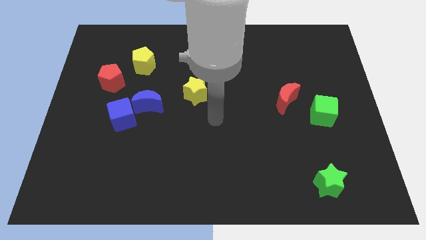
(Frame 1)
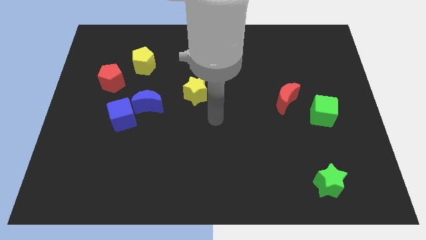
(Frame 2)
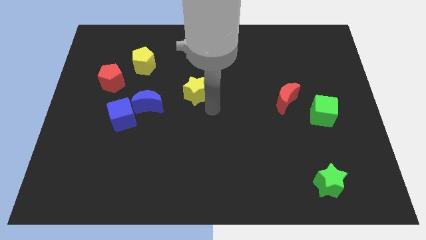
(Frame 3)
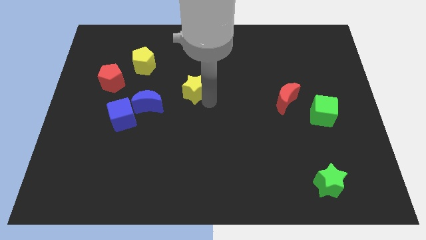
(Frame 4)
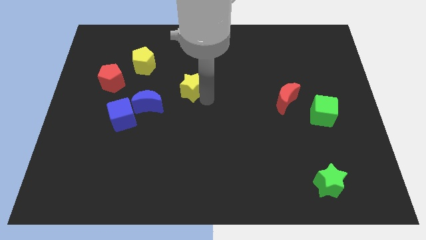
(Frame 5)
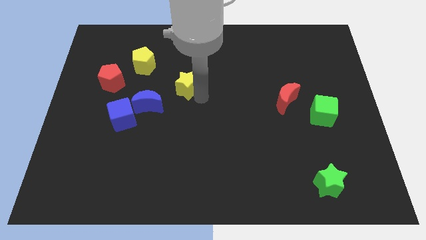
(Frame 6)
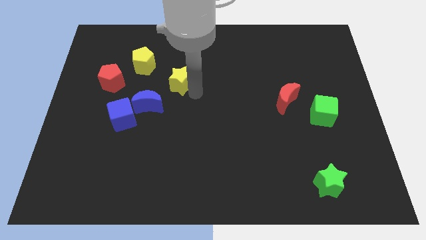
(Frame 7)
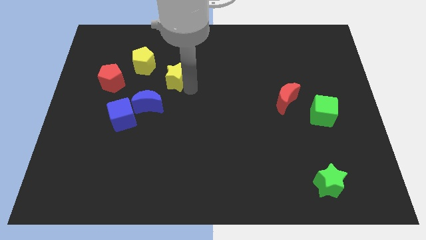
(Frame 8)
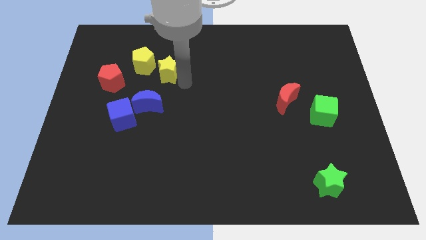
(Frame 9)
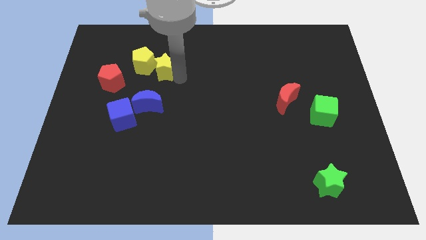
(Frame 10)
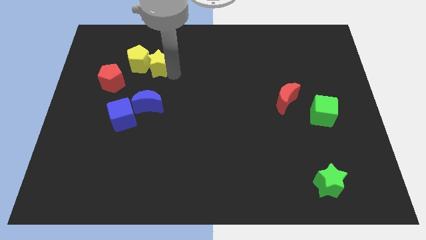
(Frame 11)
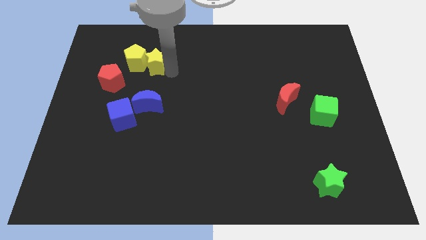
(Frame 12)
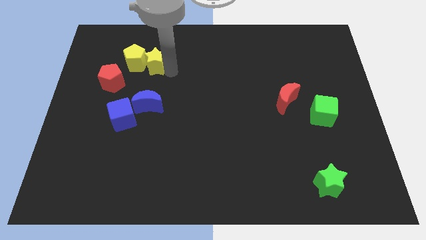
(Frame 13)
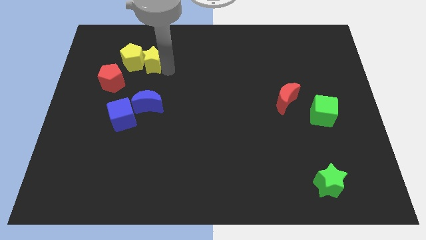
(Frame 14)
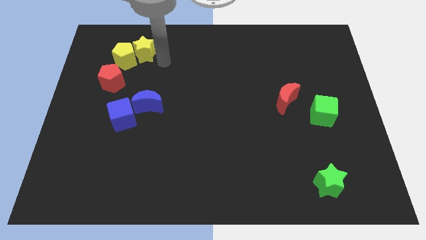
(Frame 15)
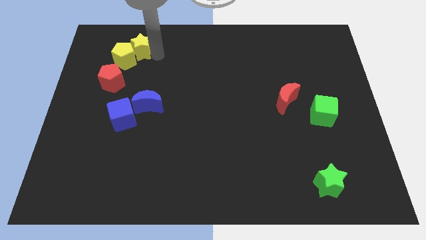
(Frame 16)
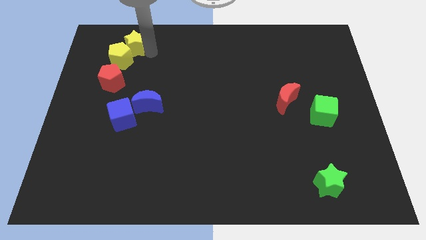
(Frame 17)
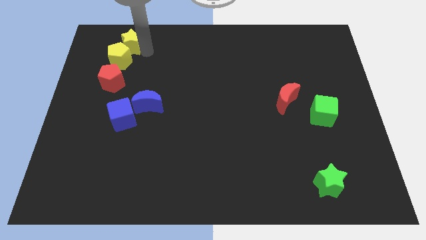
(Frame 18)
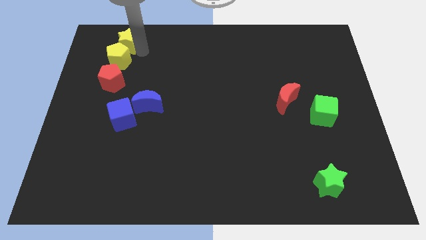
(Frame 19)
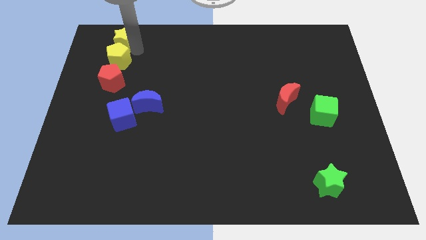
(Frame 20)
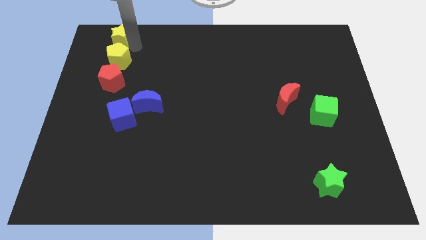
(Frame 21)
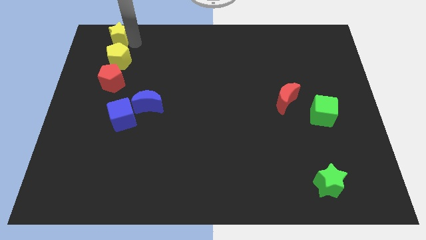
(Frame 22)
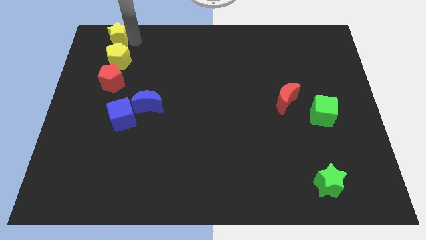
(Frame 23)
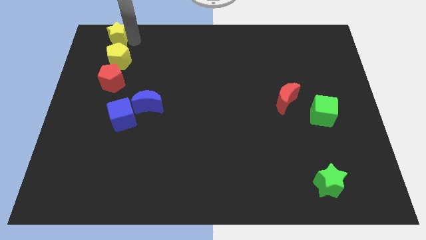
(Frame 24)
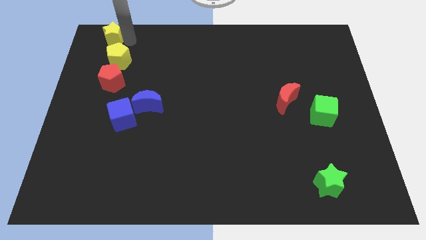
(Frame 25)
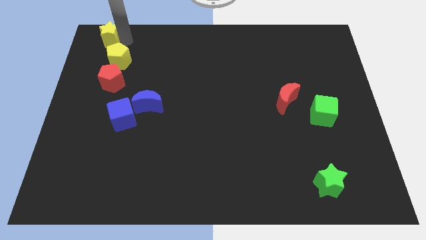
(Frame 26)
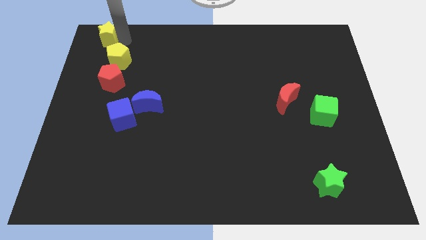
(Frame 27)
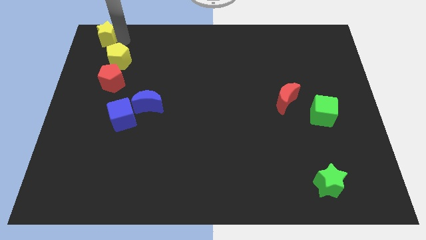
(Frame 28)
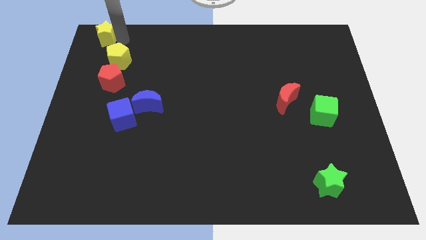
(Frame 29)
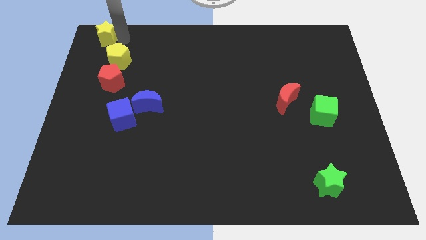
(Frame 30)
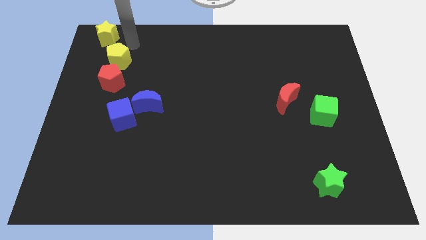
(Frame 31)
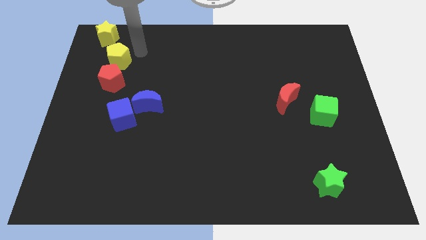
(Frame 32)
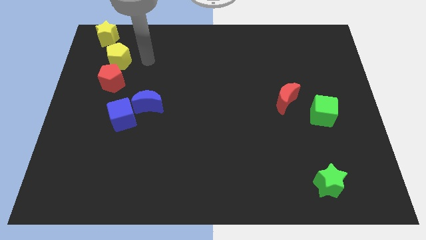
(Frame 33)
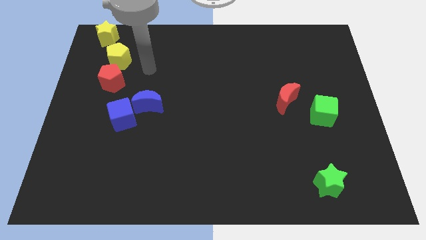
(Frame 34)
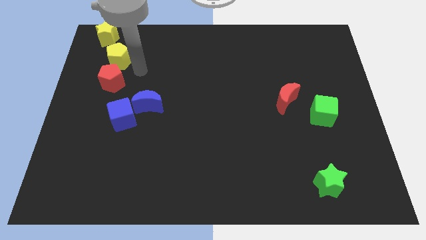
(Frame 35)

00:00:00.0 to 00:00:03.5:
move the yellow star to the top left corner of the board

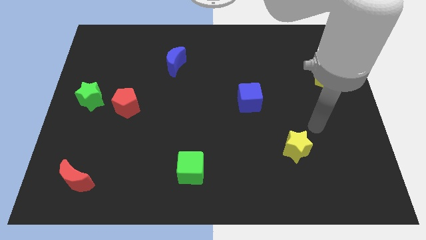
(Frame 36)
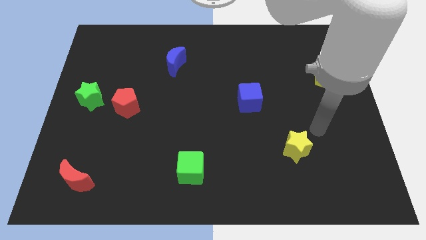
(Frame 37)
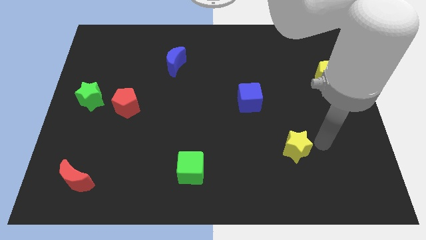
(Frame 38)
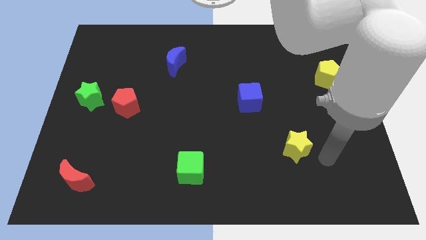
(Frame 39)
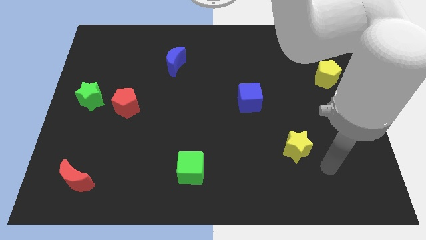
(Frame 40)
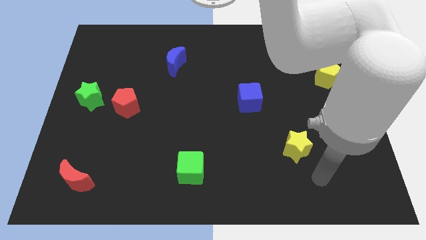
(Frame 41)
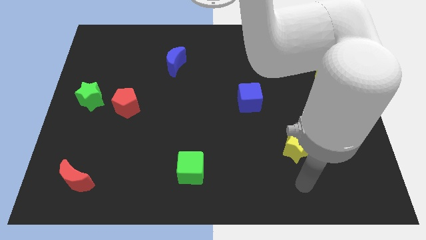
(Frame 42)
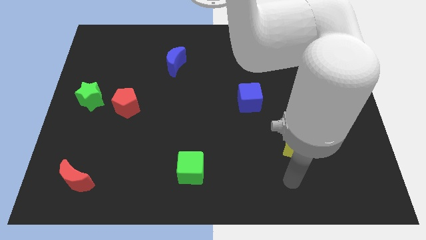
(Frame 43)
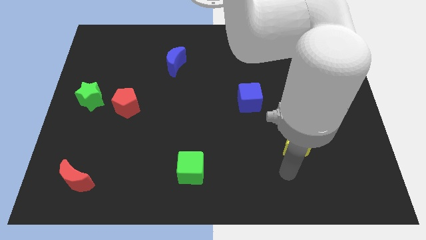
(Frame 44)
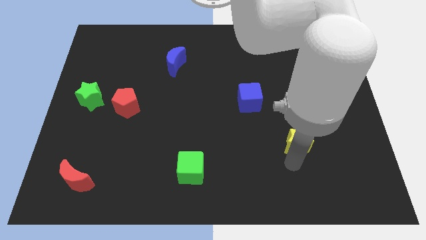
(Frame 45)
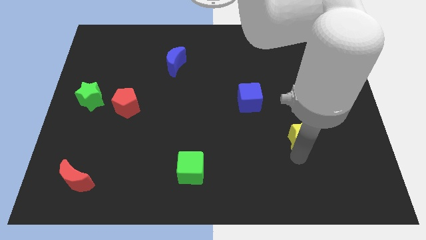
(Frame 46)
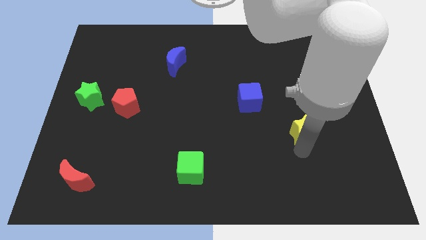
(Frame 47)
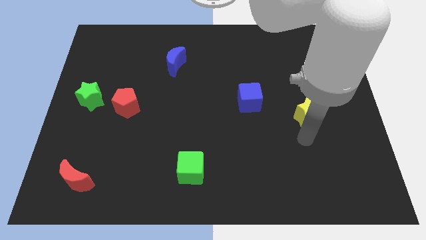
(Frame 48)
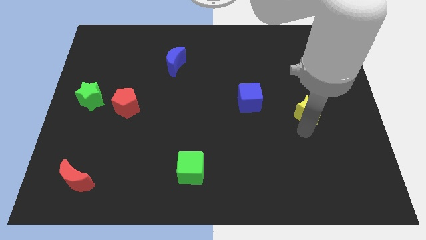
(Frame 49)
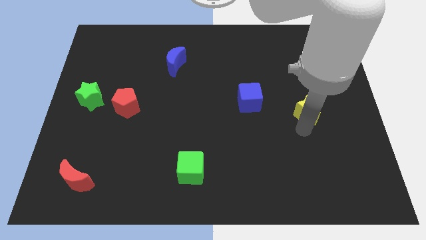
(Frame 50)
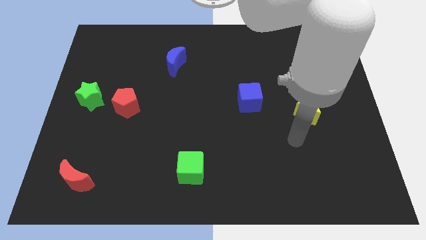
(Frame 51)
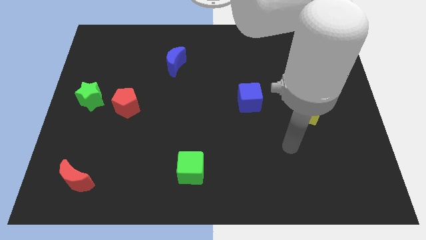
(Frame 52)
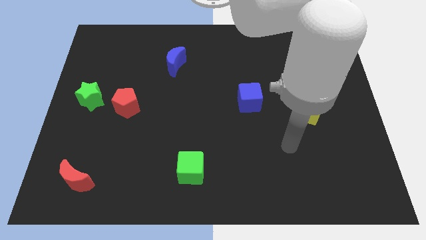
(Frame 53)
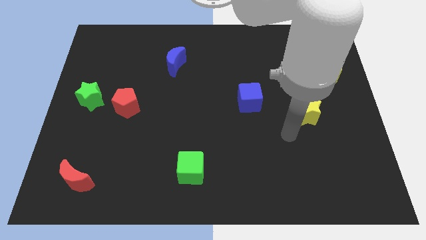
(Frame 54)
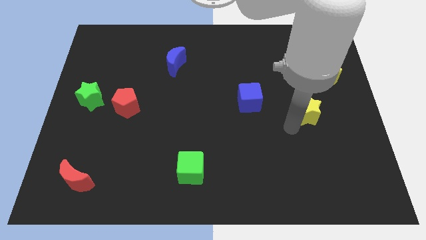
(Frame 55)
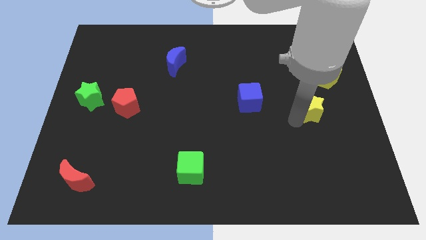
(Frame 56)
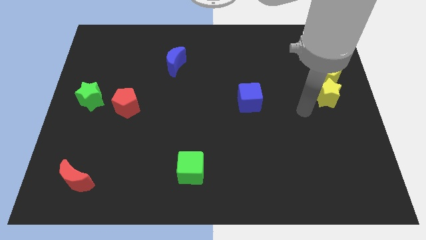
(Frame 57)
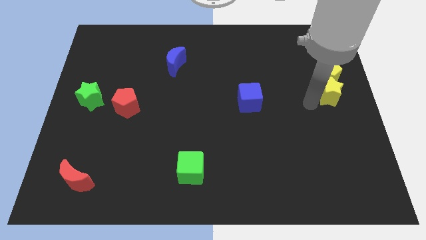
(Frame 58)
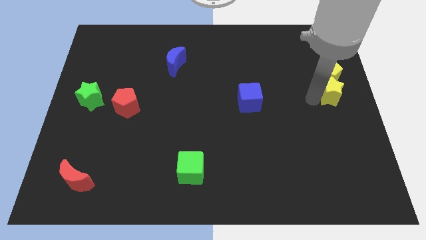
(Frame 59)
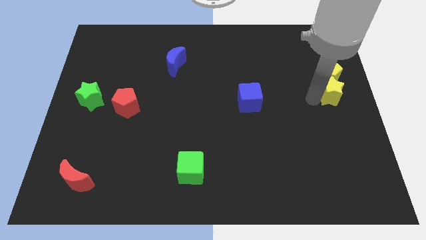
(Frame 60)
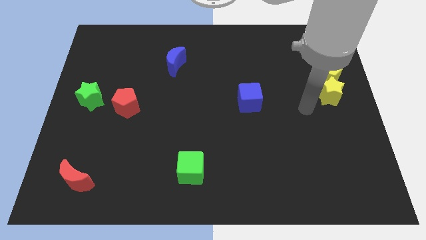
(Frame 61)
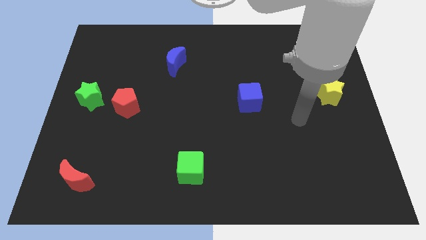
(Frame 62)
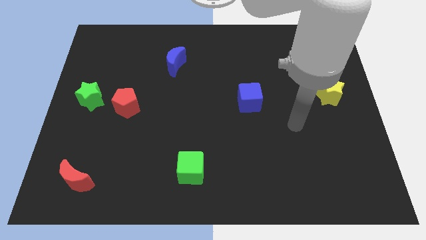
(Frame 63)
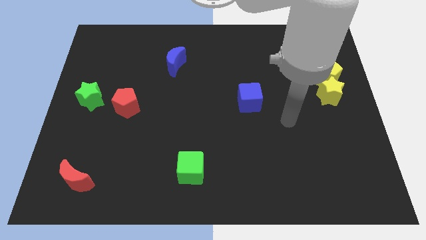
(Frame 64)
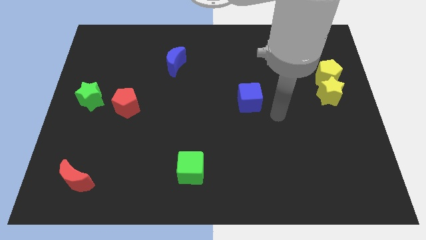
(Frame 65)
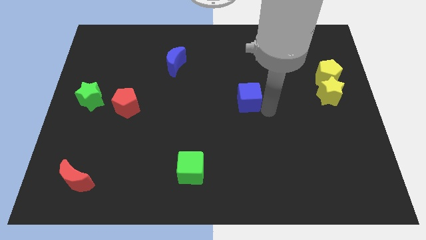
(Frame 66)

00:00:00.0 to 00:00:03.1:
push the yellow star to the bottom of the yellow pentagon

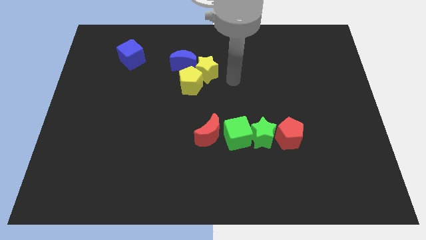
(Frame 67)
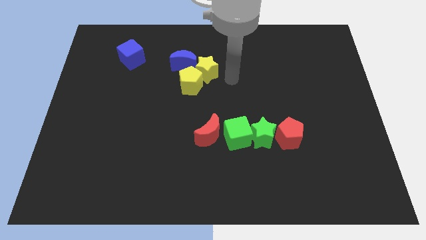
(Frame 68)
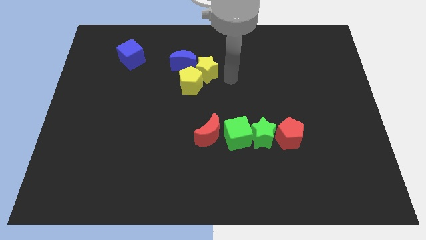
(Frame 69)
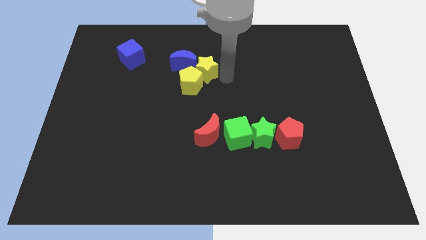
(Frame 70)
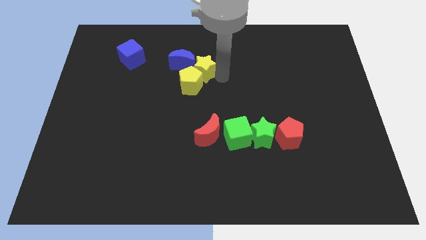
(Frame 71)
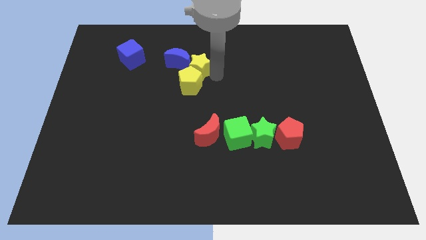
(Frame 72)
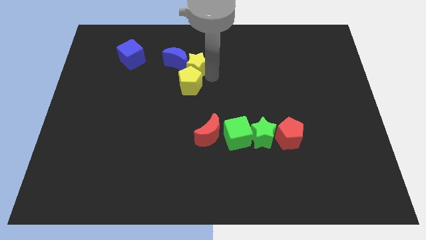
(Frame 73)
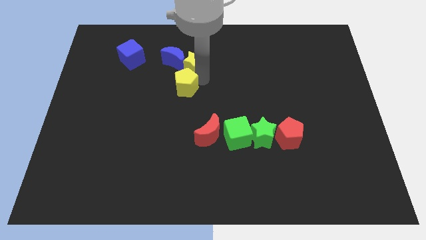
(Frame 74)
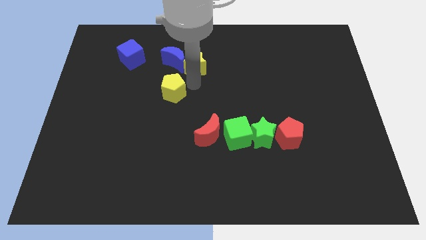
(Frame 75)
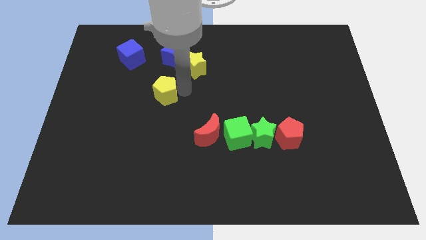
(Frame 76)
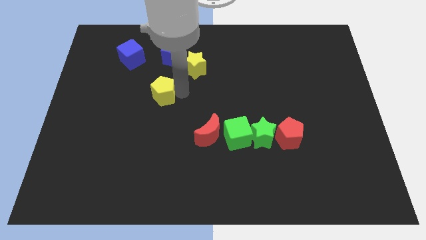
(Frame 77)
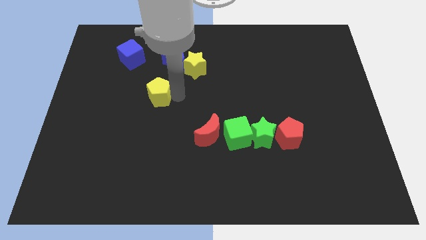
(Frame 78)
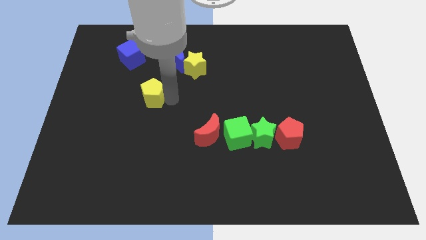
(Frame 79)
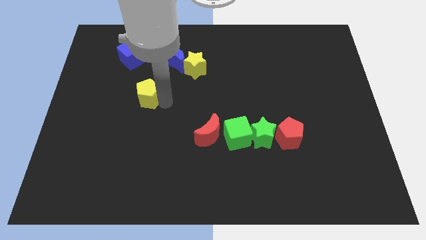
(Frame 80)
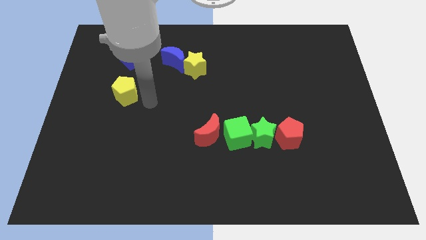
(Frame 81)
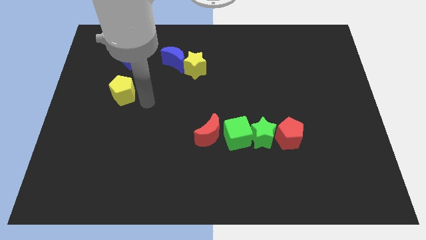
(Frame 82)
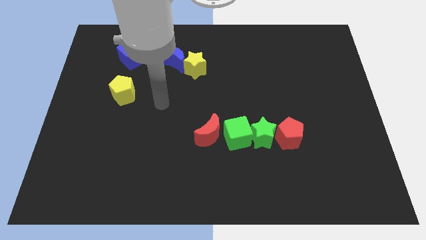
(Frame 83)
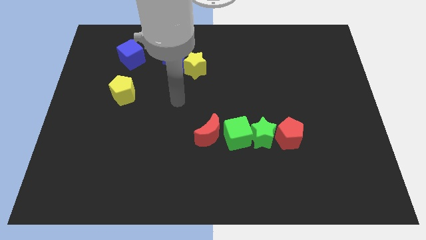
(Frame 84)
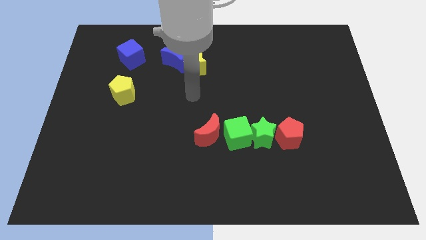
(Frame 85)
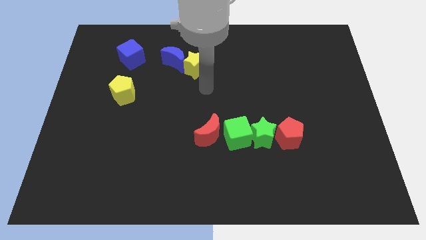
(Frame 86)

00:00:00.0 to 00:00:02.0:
separate yellow pentagon from the yellow star

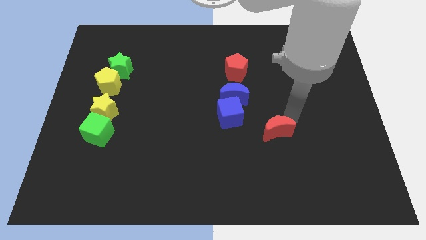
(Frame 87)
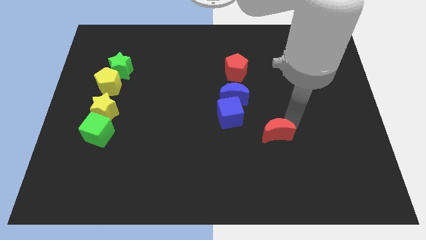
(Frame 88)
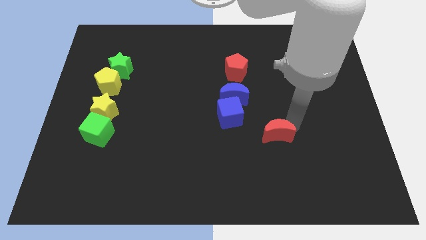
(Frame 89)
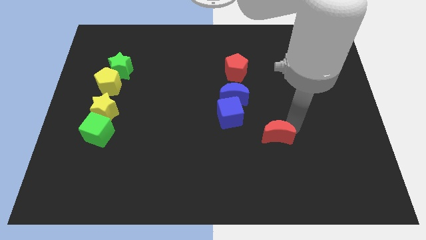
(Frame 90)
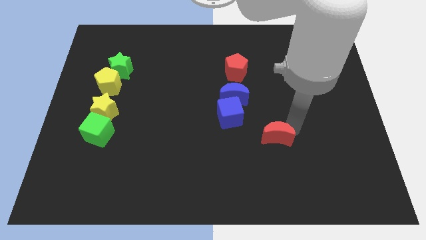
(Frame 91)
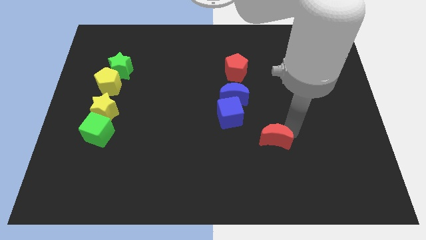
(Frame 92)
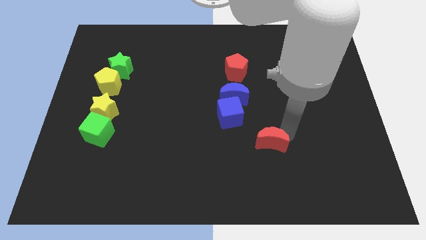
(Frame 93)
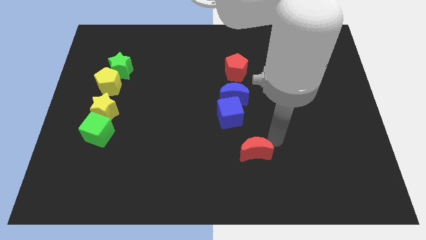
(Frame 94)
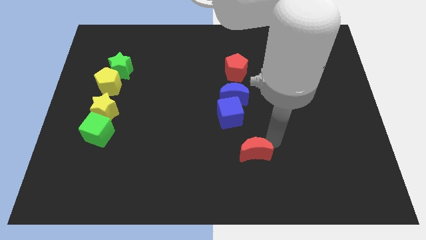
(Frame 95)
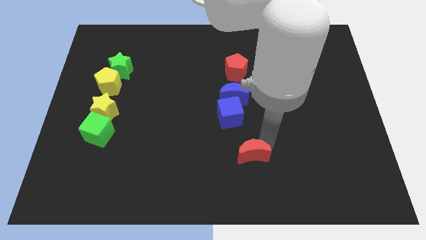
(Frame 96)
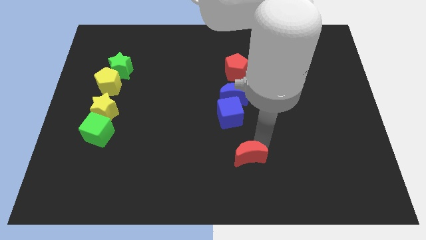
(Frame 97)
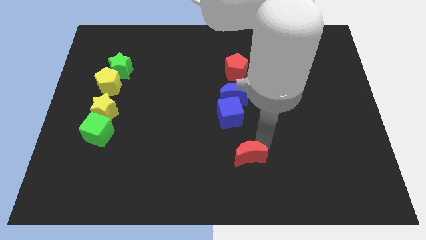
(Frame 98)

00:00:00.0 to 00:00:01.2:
push red crescent slightly towards left down
